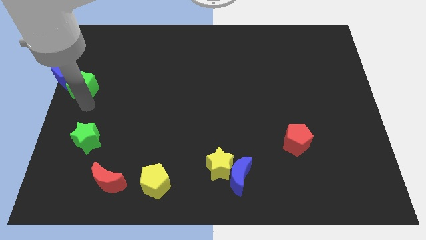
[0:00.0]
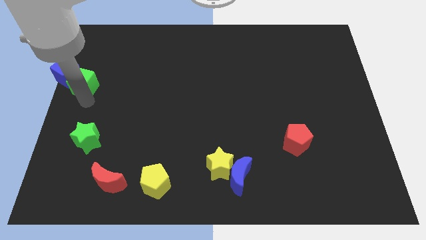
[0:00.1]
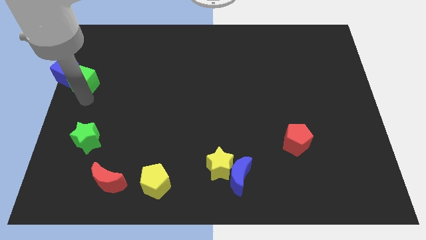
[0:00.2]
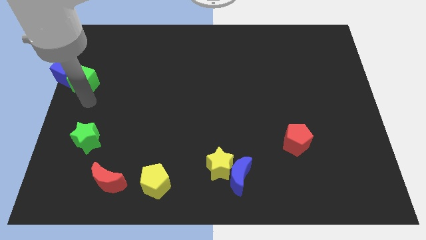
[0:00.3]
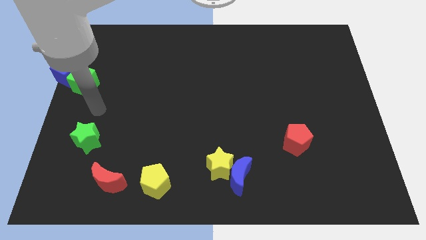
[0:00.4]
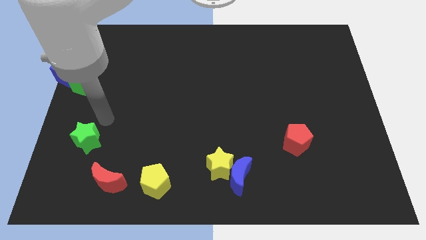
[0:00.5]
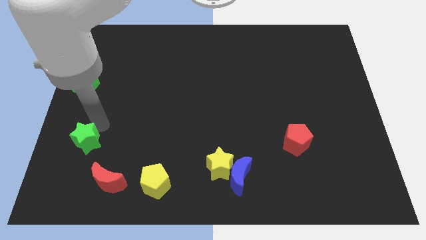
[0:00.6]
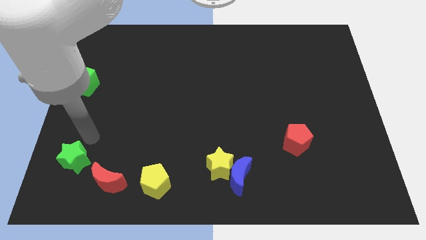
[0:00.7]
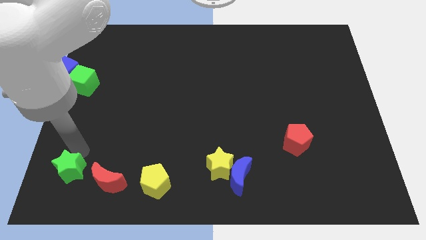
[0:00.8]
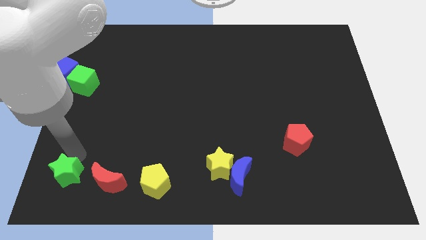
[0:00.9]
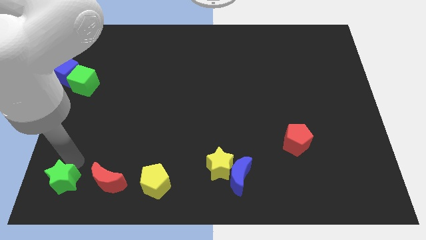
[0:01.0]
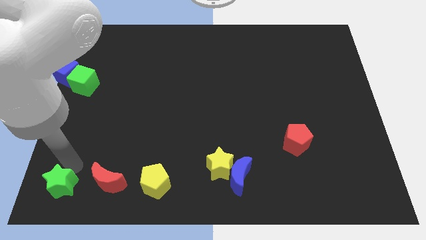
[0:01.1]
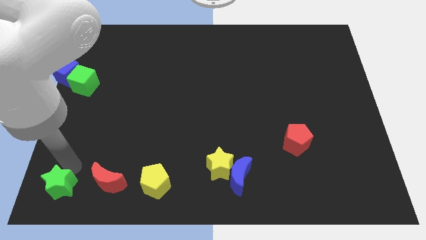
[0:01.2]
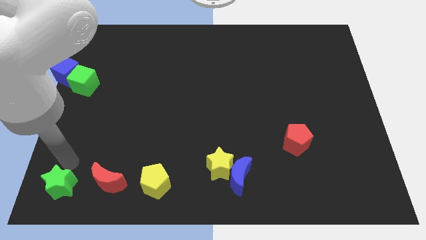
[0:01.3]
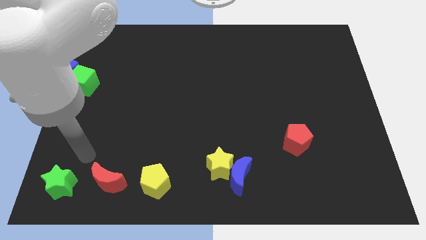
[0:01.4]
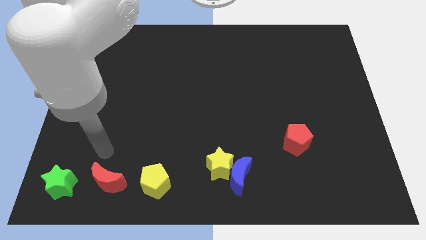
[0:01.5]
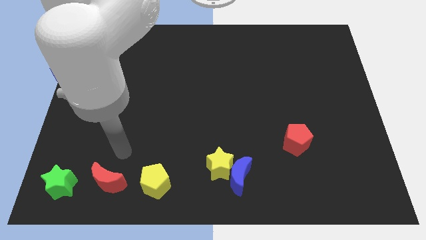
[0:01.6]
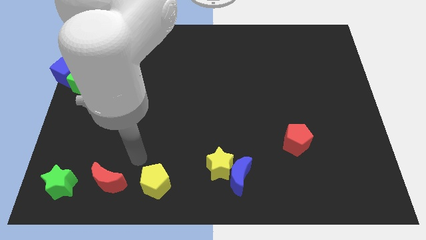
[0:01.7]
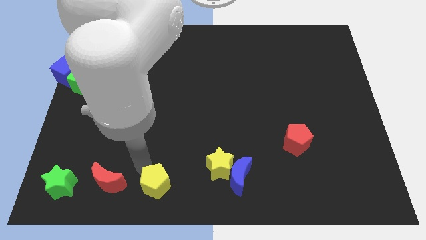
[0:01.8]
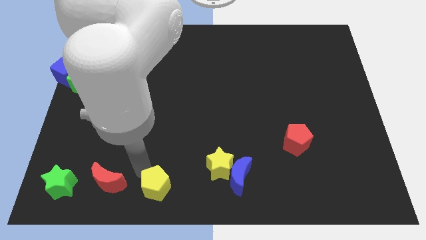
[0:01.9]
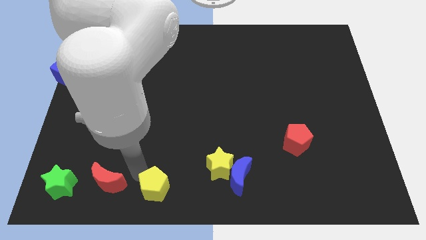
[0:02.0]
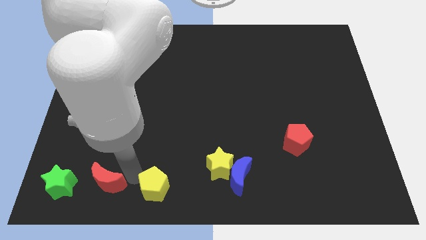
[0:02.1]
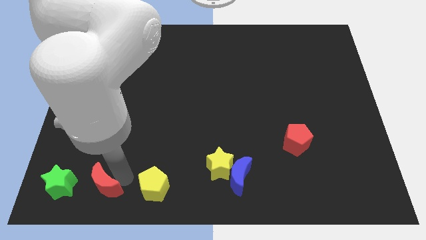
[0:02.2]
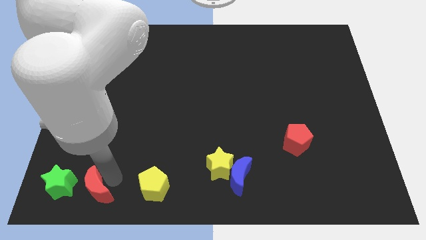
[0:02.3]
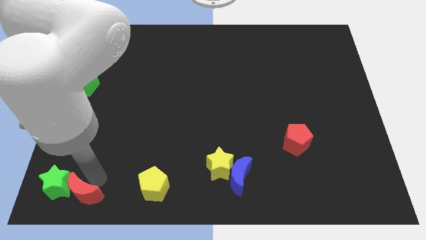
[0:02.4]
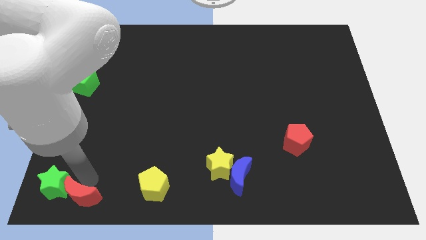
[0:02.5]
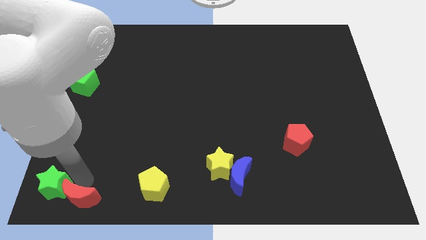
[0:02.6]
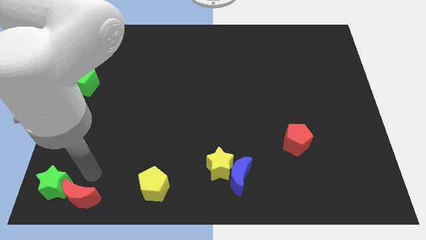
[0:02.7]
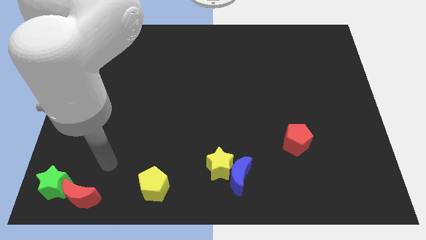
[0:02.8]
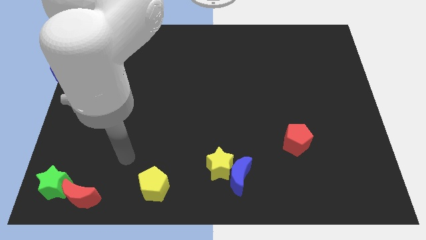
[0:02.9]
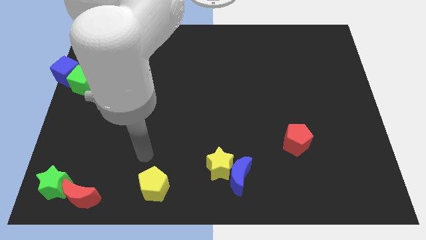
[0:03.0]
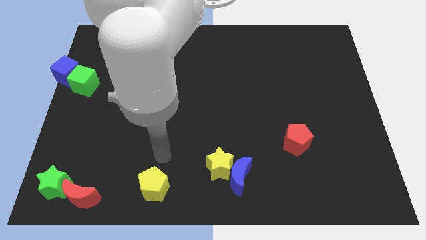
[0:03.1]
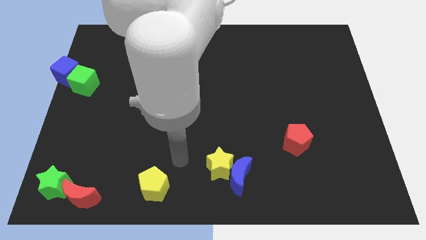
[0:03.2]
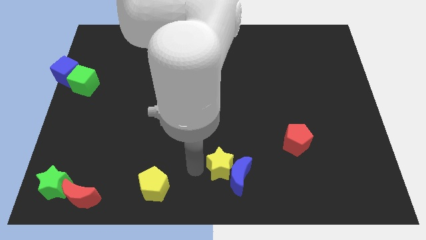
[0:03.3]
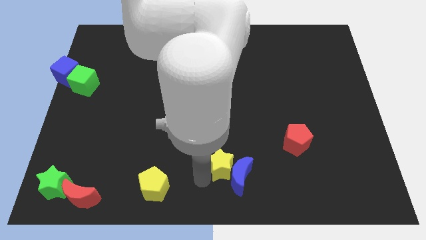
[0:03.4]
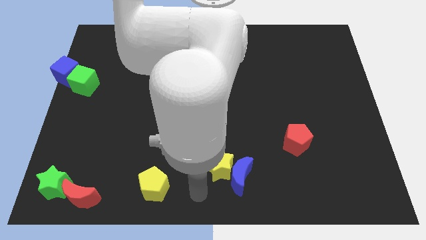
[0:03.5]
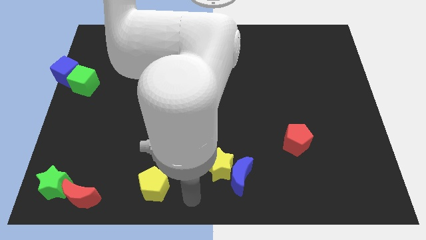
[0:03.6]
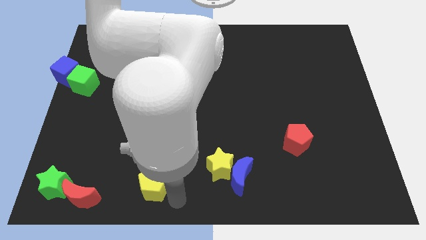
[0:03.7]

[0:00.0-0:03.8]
slide the green star and red moon to the bottom right of the board

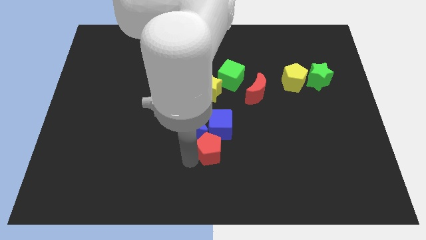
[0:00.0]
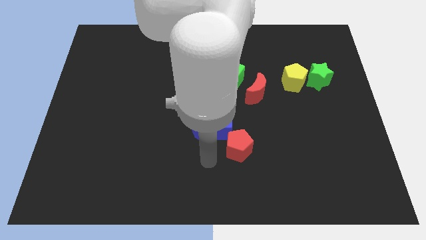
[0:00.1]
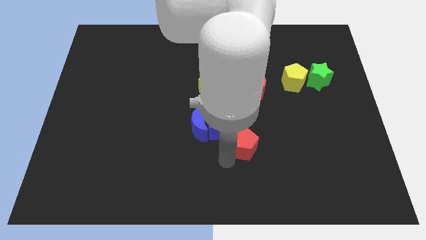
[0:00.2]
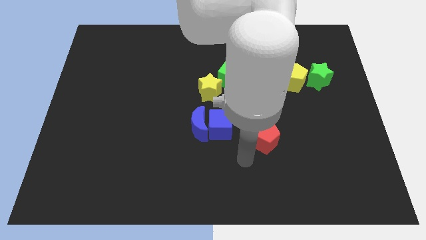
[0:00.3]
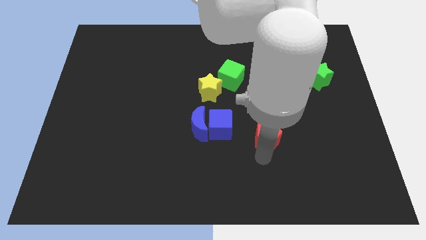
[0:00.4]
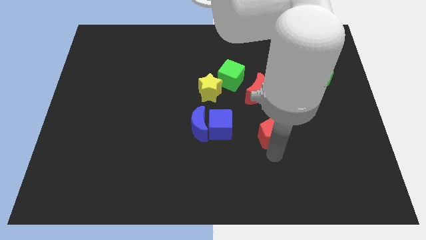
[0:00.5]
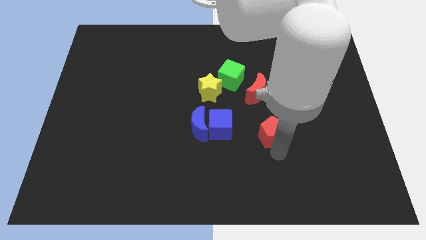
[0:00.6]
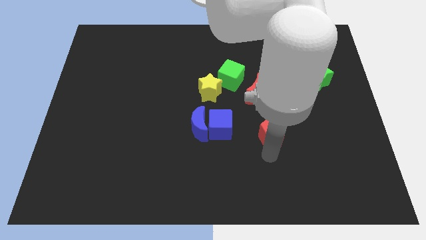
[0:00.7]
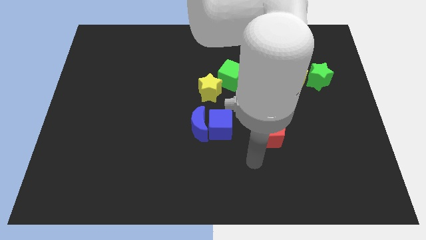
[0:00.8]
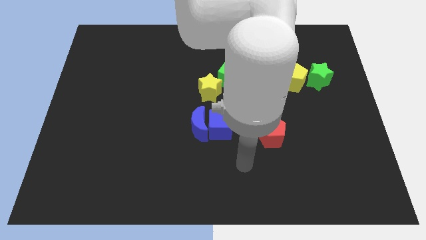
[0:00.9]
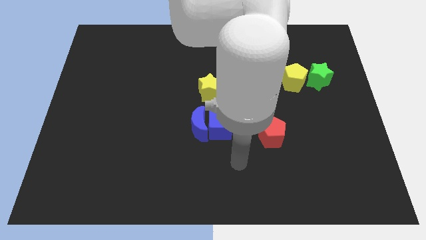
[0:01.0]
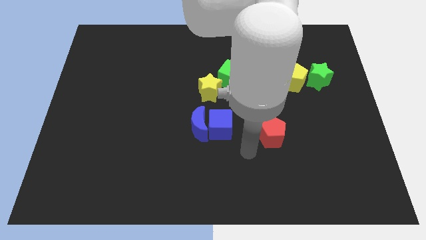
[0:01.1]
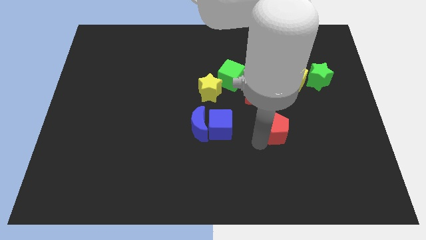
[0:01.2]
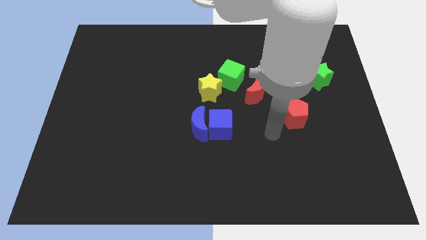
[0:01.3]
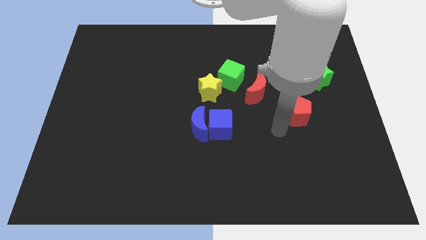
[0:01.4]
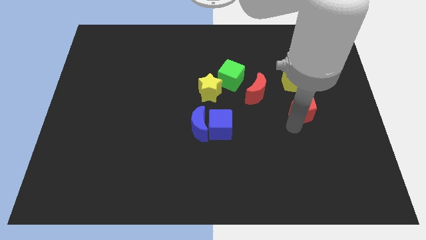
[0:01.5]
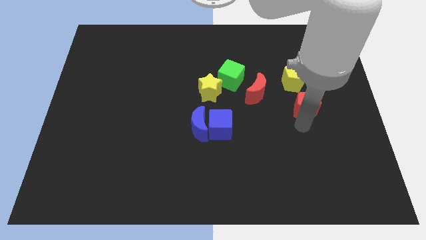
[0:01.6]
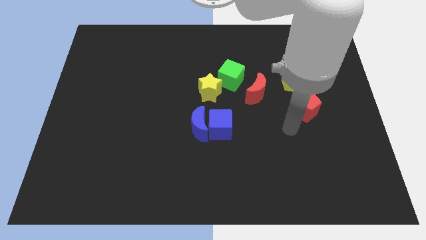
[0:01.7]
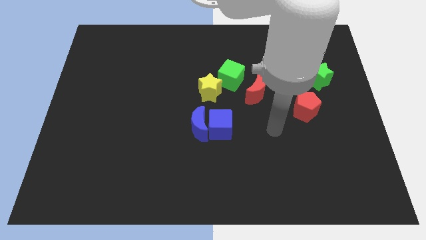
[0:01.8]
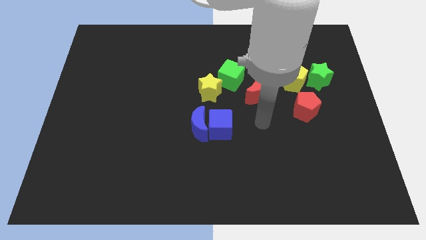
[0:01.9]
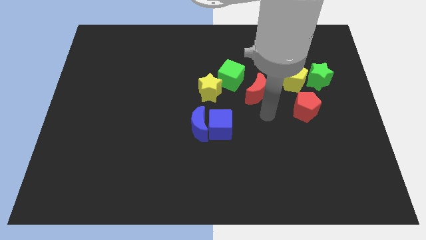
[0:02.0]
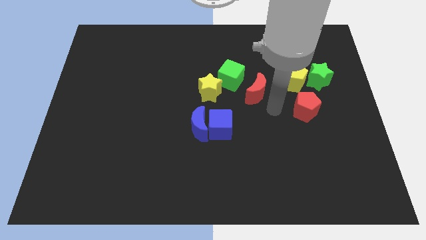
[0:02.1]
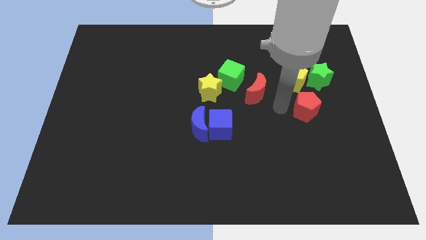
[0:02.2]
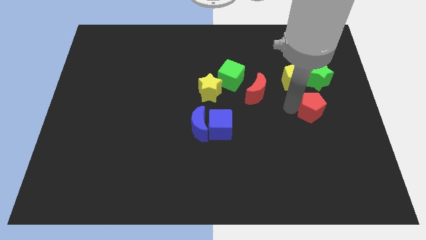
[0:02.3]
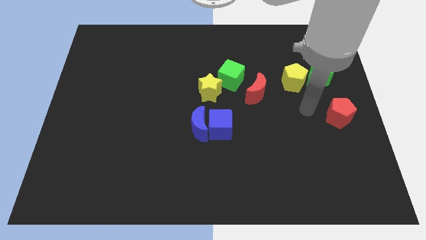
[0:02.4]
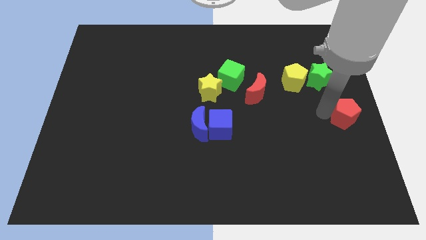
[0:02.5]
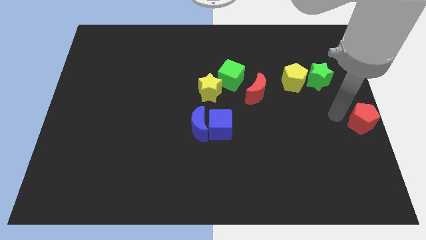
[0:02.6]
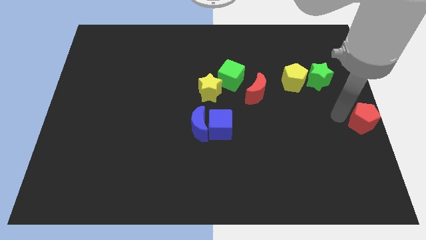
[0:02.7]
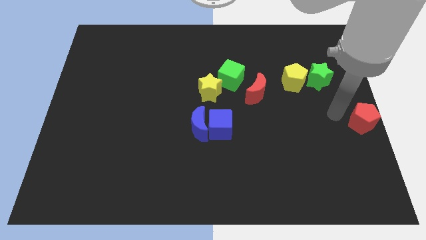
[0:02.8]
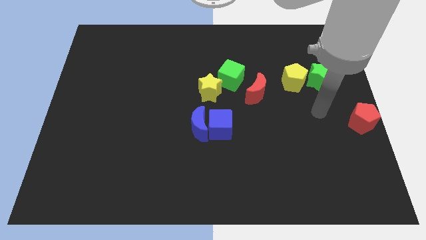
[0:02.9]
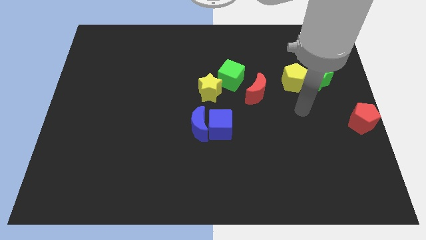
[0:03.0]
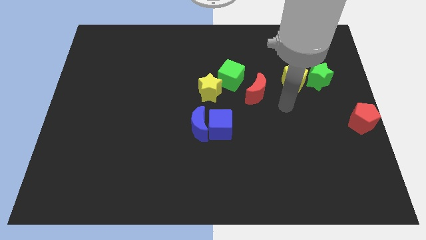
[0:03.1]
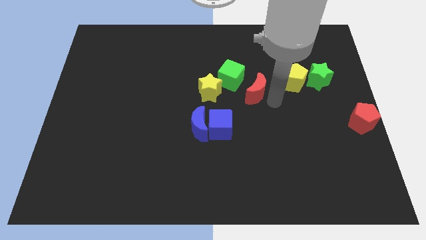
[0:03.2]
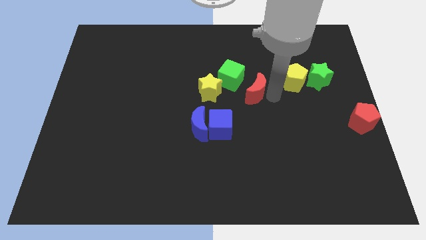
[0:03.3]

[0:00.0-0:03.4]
push the red pentagon to the right center of the board

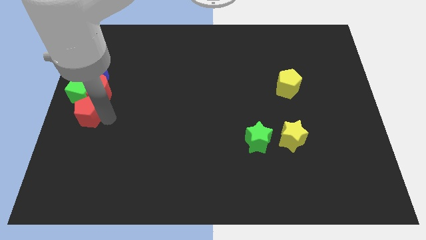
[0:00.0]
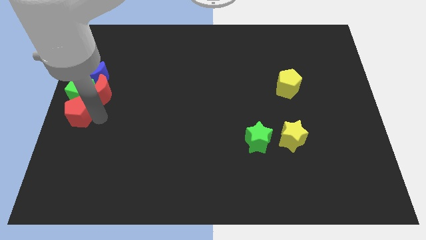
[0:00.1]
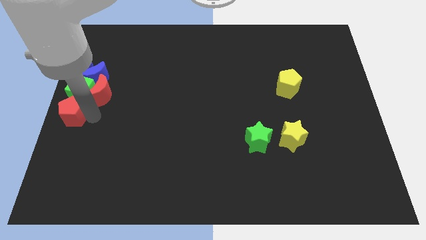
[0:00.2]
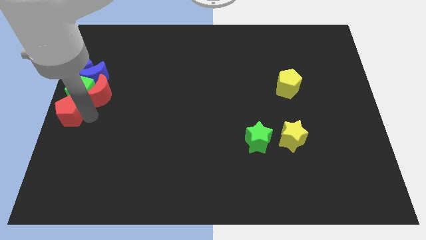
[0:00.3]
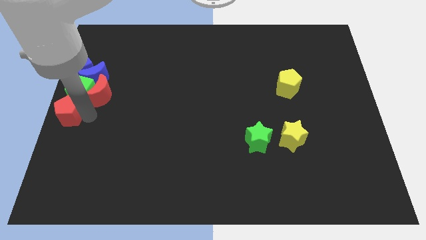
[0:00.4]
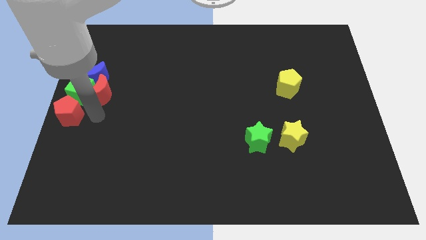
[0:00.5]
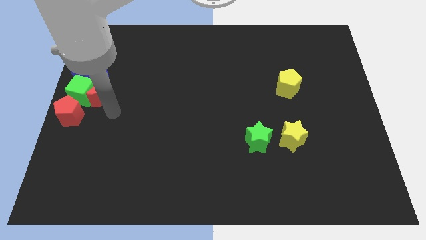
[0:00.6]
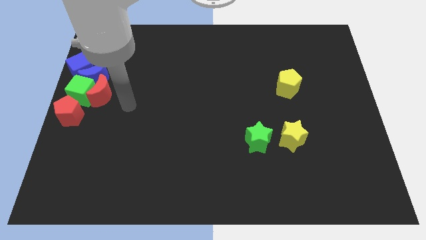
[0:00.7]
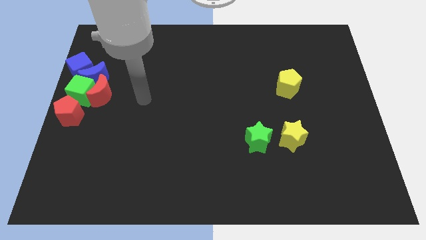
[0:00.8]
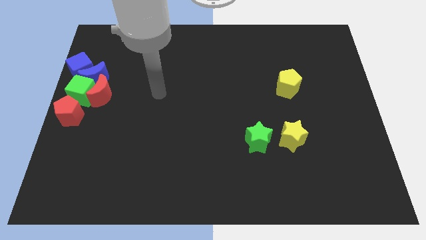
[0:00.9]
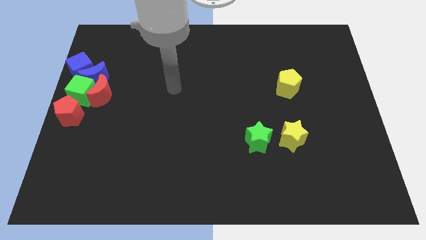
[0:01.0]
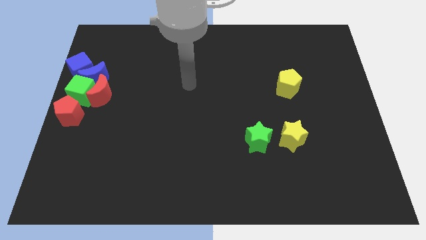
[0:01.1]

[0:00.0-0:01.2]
place the red pentagon to the center left of the board

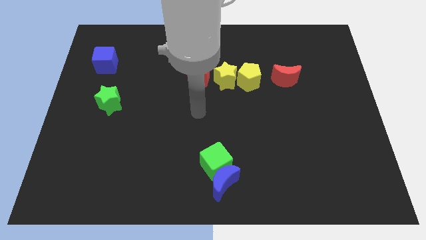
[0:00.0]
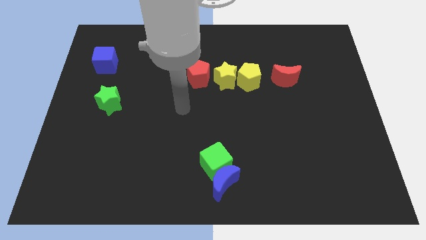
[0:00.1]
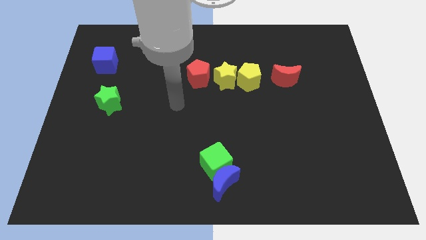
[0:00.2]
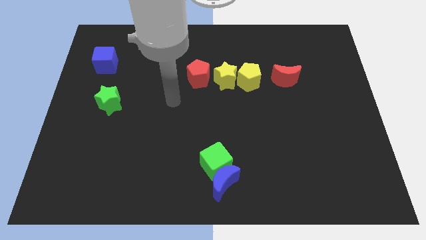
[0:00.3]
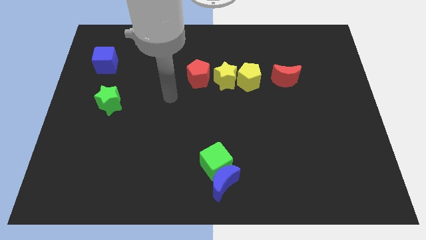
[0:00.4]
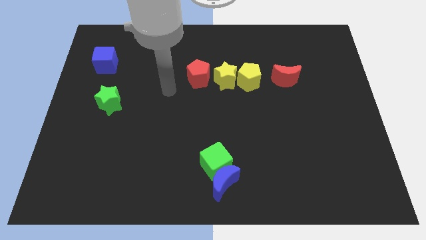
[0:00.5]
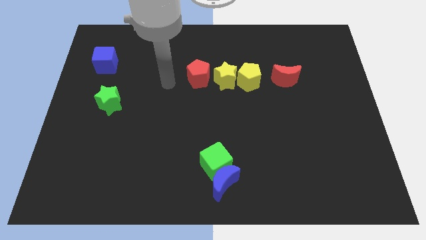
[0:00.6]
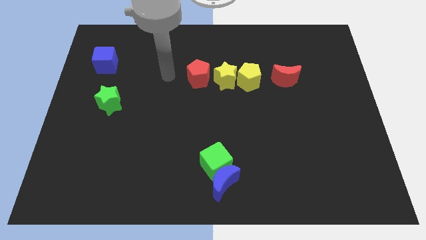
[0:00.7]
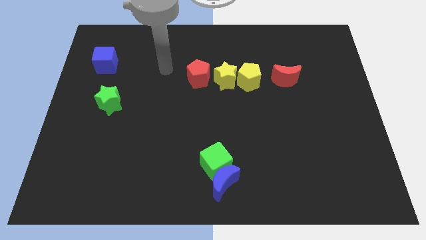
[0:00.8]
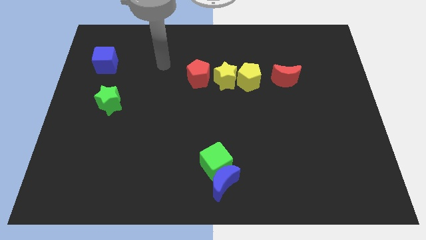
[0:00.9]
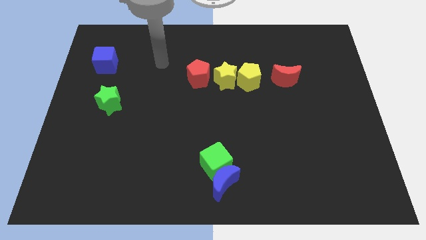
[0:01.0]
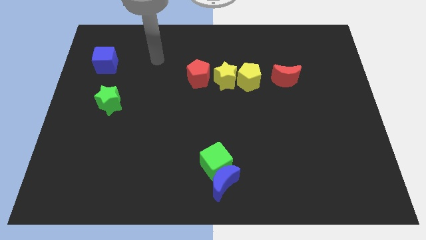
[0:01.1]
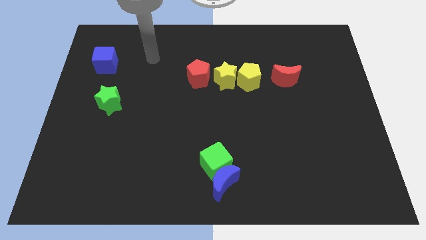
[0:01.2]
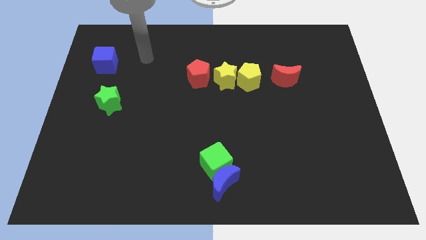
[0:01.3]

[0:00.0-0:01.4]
place your arm near the blue cube
